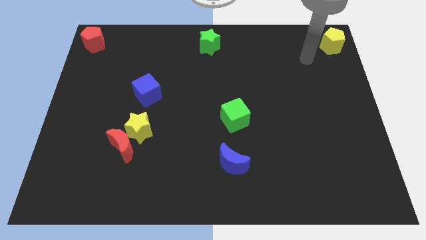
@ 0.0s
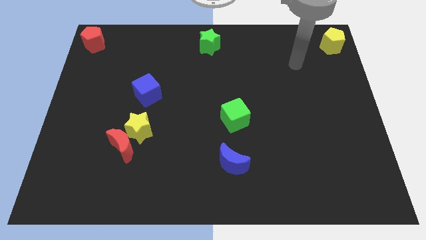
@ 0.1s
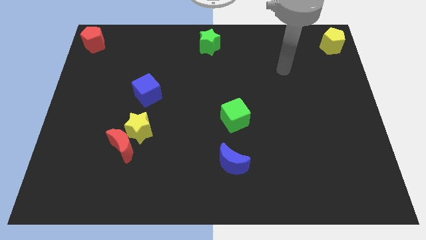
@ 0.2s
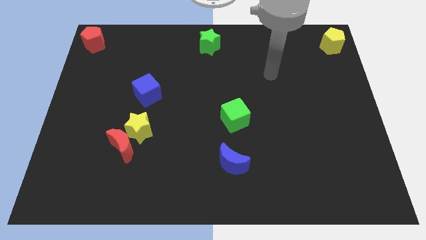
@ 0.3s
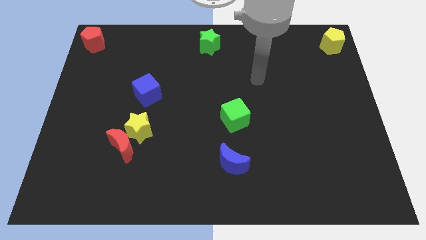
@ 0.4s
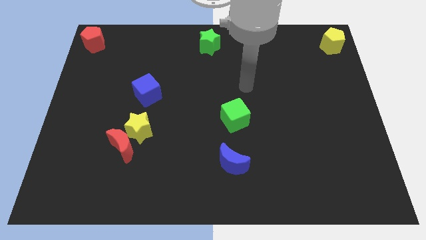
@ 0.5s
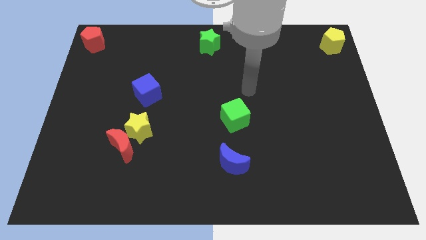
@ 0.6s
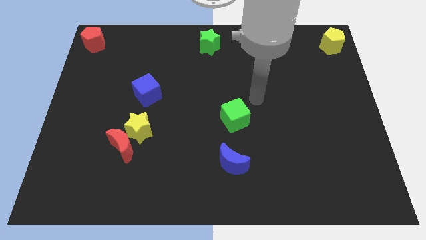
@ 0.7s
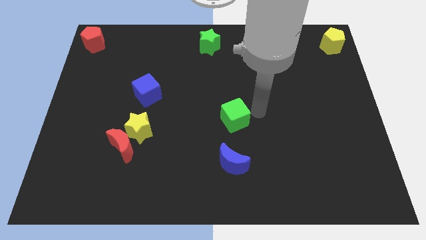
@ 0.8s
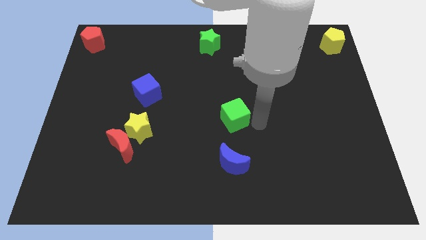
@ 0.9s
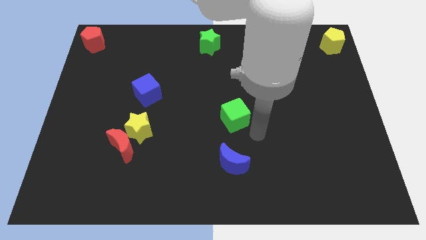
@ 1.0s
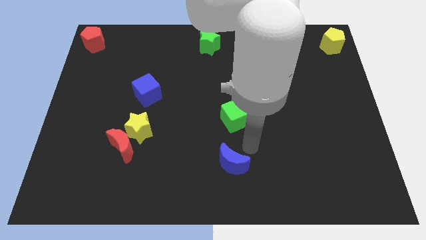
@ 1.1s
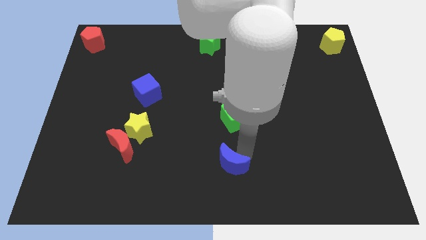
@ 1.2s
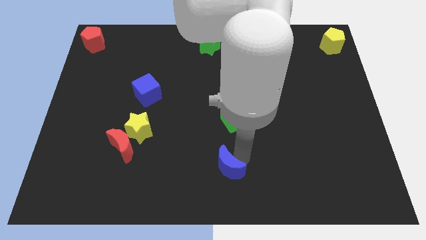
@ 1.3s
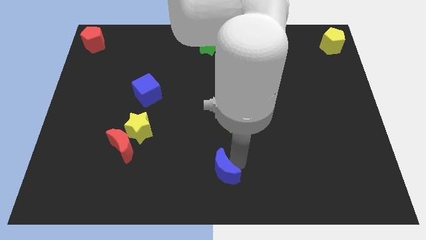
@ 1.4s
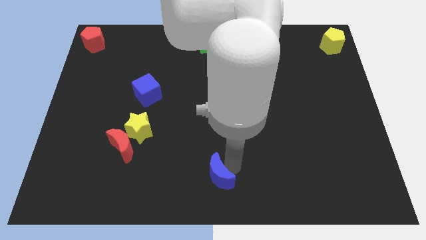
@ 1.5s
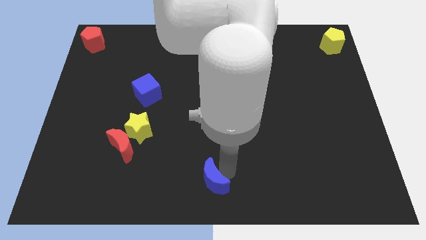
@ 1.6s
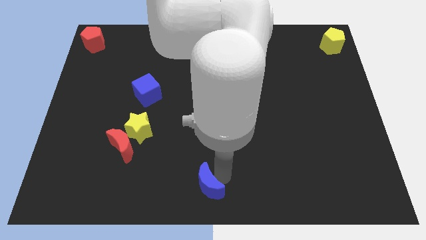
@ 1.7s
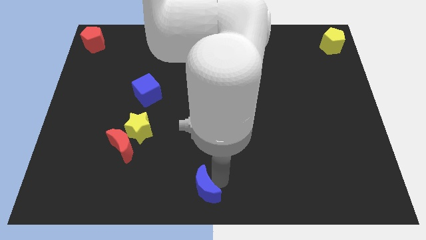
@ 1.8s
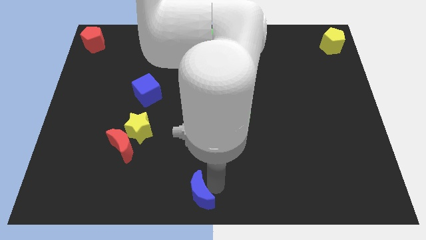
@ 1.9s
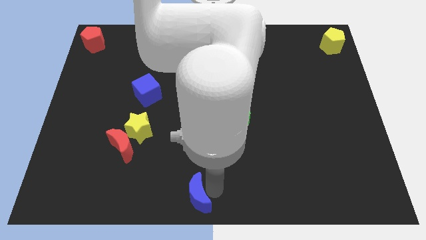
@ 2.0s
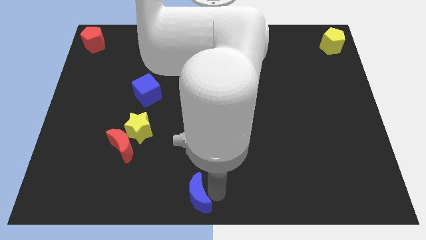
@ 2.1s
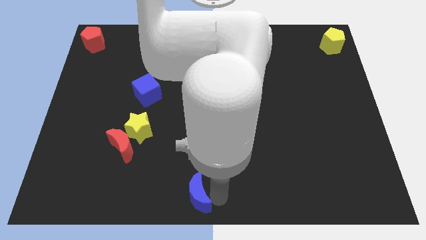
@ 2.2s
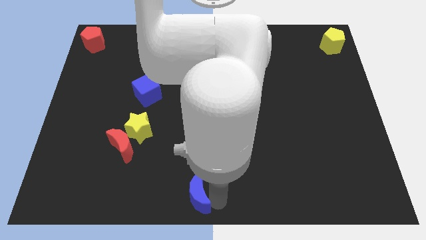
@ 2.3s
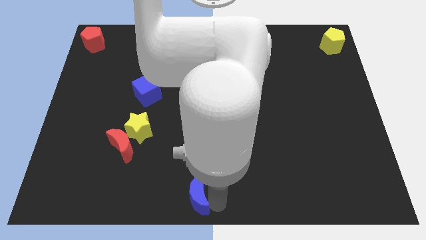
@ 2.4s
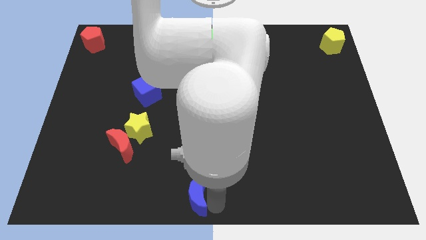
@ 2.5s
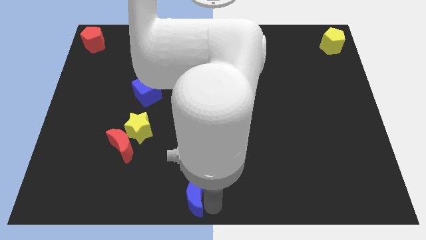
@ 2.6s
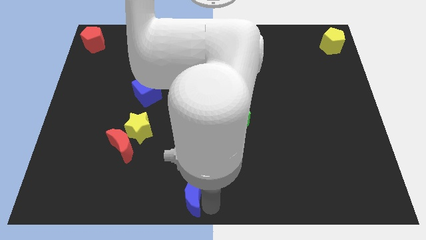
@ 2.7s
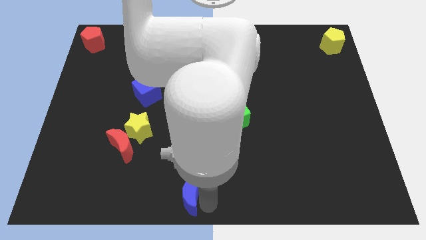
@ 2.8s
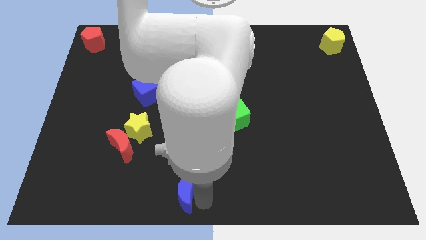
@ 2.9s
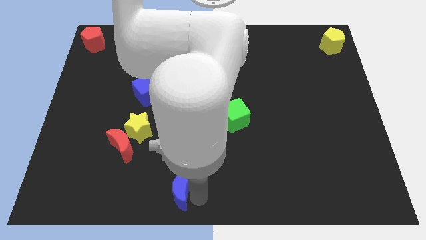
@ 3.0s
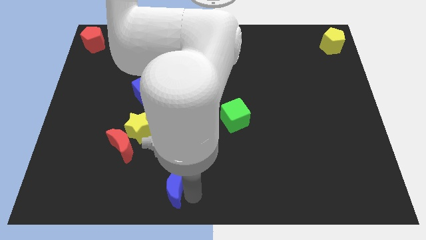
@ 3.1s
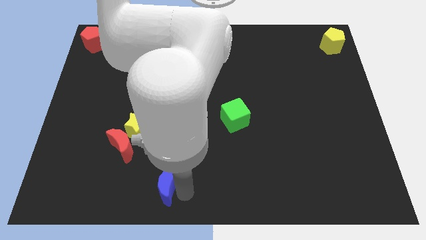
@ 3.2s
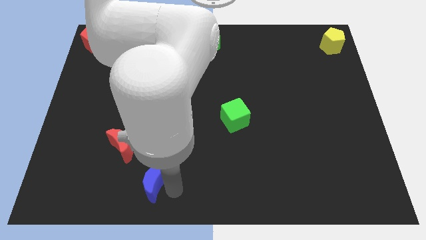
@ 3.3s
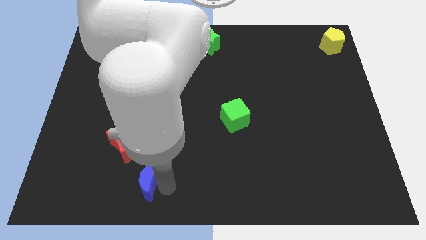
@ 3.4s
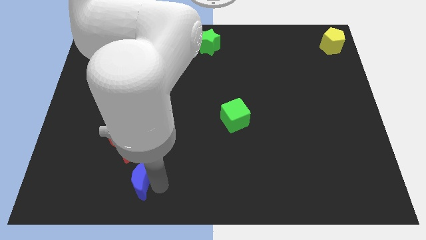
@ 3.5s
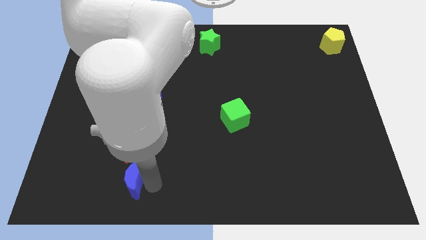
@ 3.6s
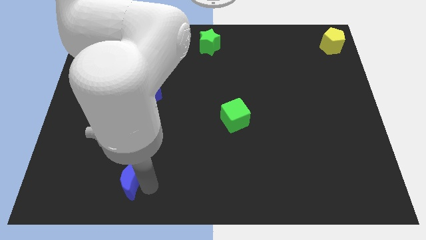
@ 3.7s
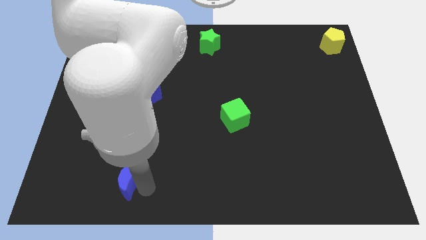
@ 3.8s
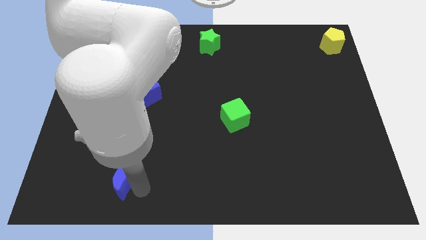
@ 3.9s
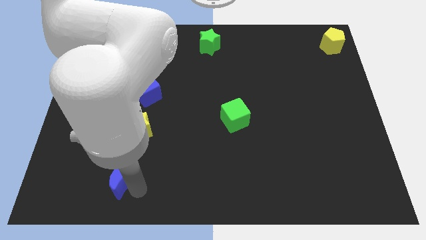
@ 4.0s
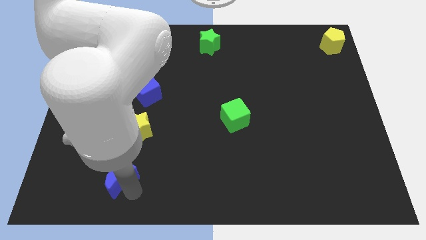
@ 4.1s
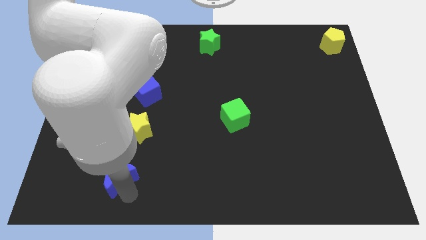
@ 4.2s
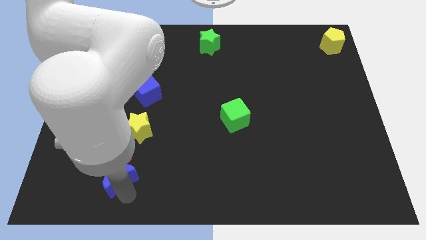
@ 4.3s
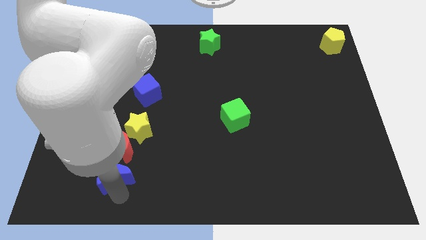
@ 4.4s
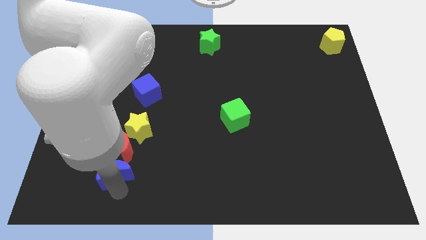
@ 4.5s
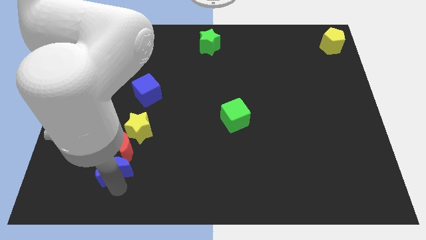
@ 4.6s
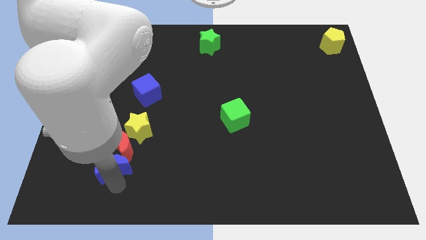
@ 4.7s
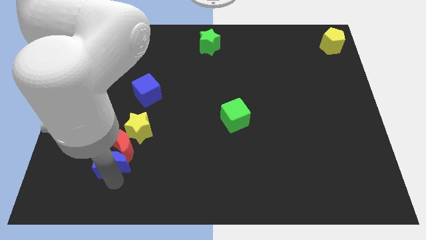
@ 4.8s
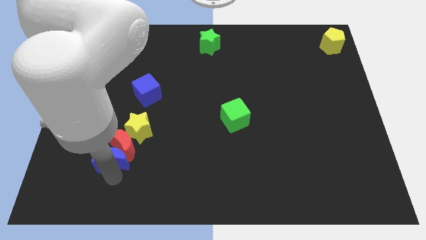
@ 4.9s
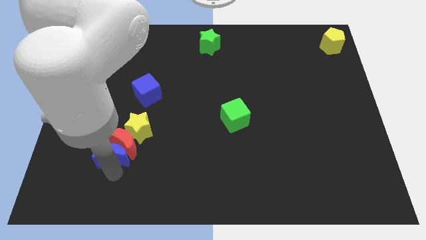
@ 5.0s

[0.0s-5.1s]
drag the blue crescent into the bottom side of the red crescent

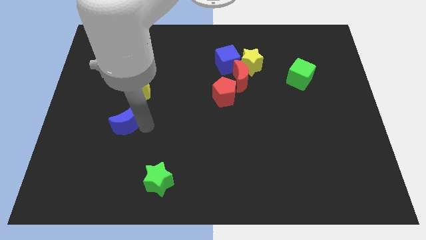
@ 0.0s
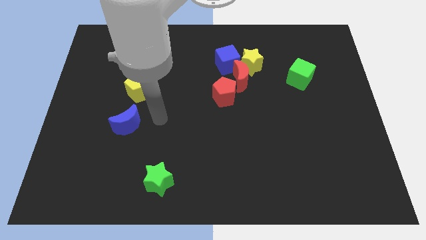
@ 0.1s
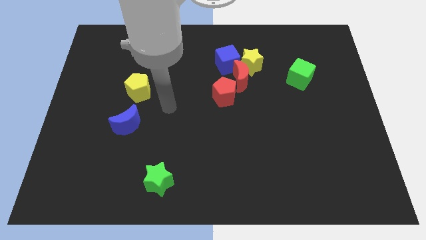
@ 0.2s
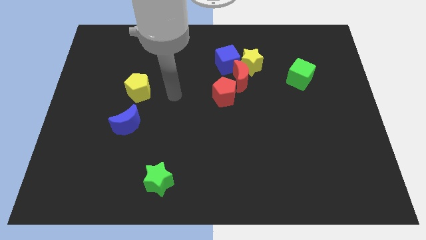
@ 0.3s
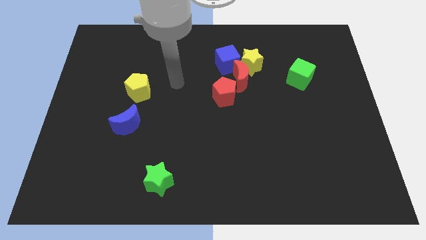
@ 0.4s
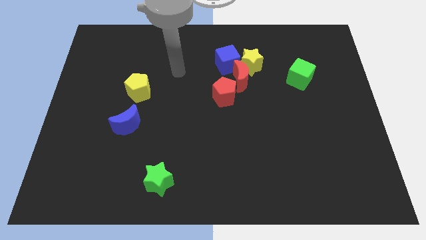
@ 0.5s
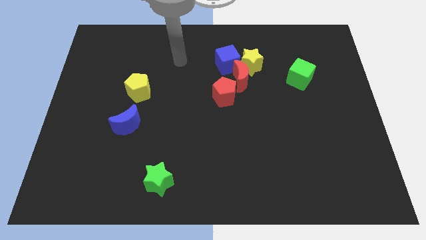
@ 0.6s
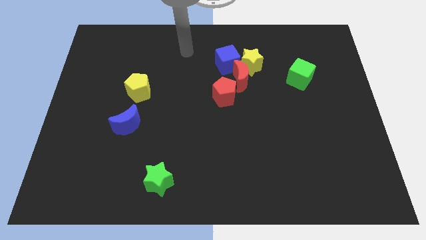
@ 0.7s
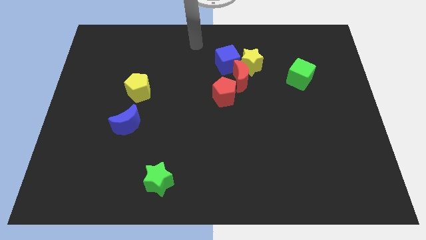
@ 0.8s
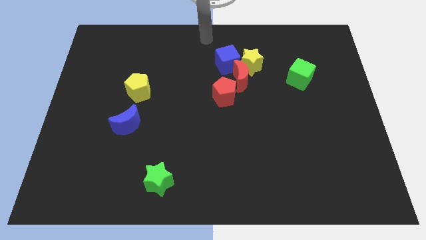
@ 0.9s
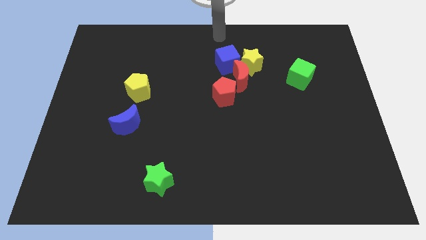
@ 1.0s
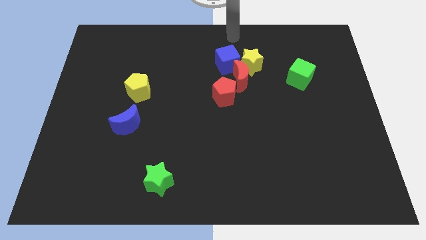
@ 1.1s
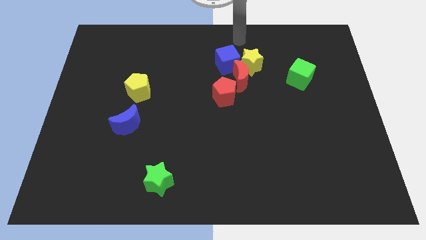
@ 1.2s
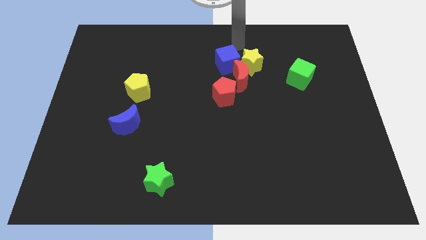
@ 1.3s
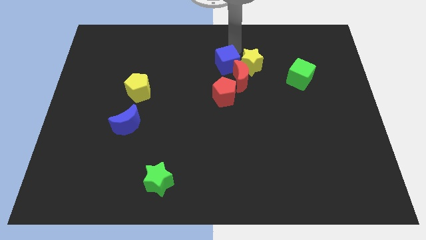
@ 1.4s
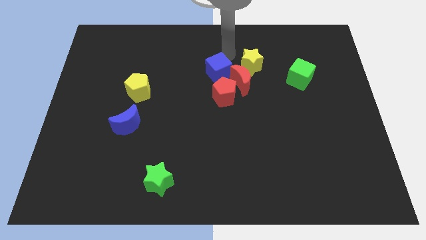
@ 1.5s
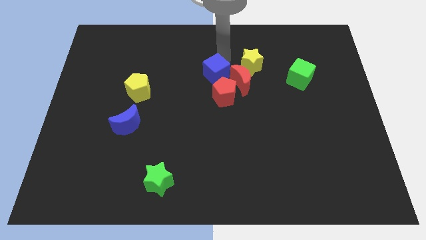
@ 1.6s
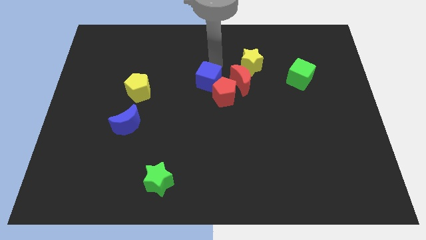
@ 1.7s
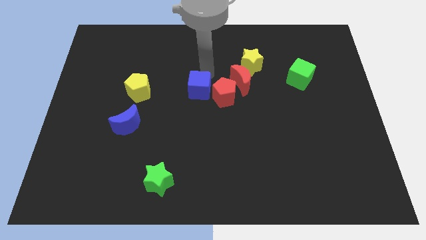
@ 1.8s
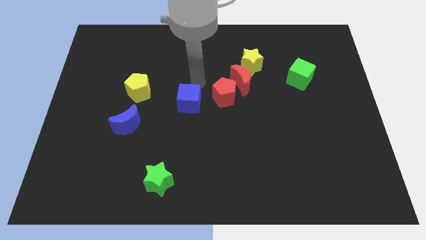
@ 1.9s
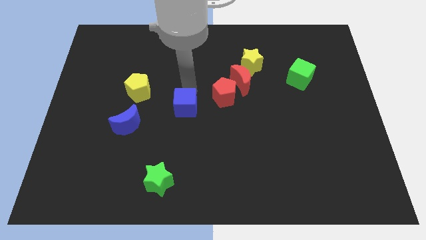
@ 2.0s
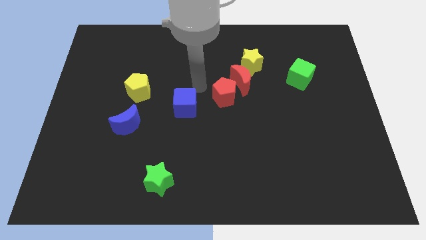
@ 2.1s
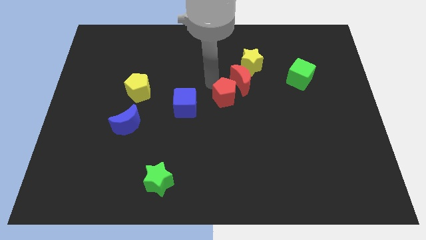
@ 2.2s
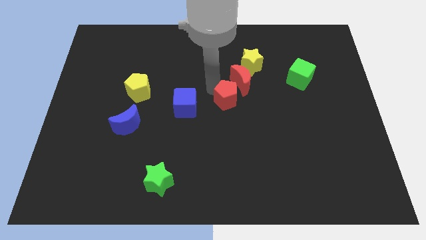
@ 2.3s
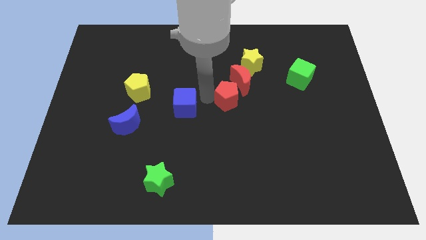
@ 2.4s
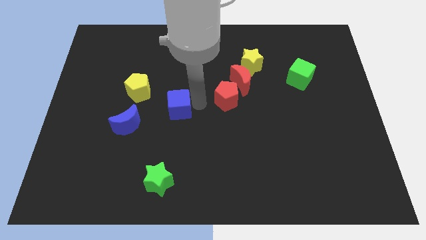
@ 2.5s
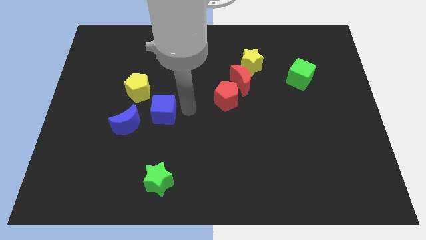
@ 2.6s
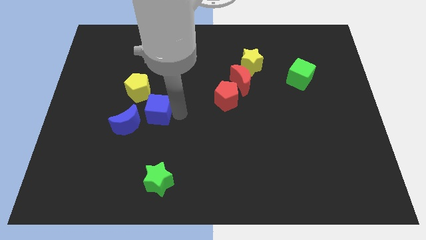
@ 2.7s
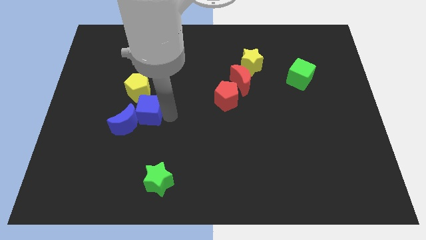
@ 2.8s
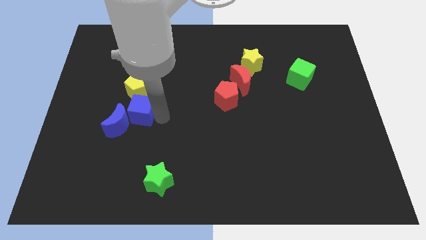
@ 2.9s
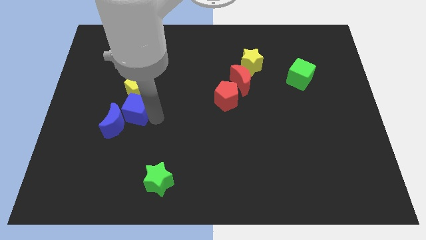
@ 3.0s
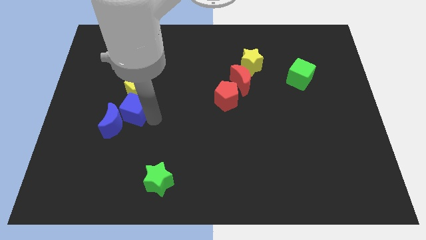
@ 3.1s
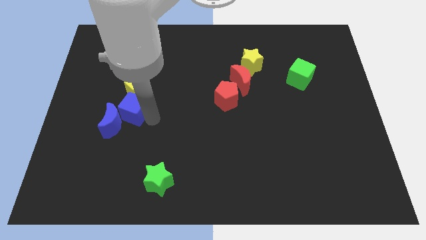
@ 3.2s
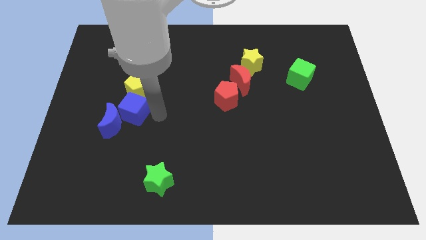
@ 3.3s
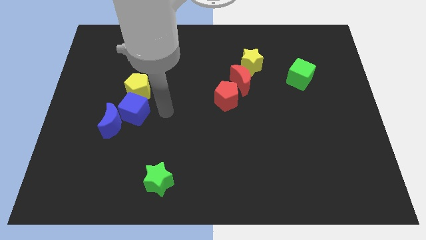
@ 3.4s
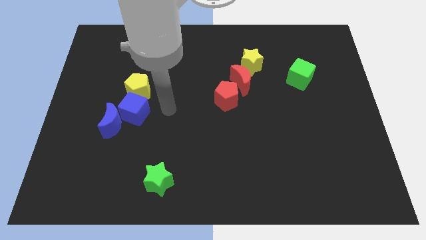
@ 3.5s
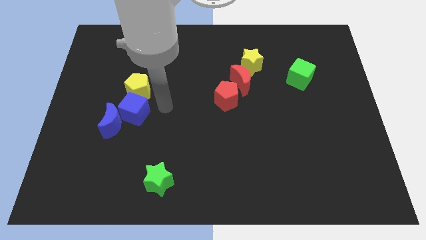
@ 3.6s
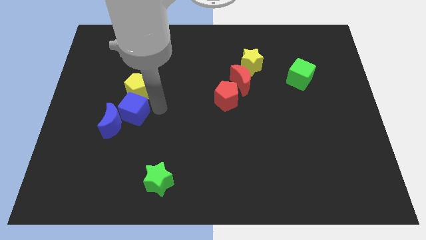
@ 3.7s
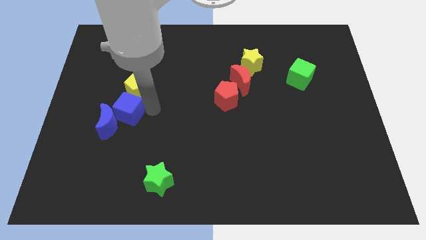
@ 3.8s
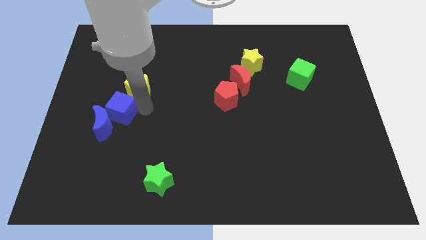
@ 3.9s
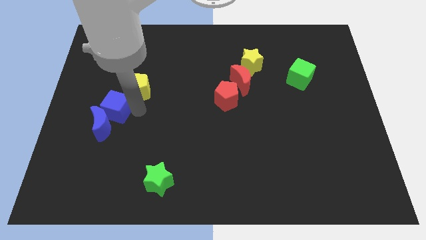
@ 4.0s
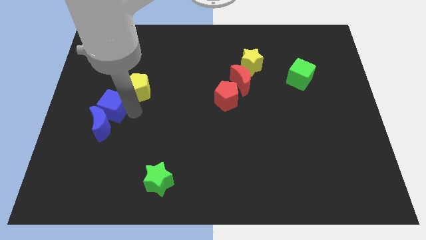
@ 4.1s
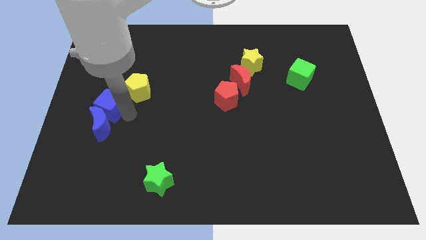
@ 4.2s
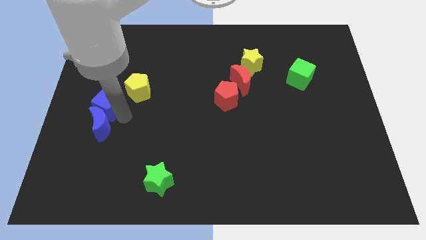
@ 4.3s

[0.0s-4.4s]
push the blue cube into the blue moon
